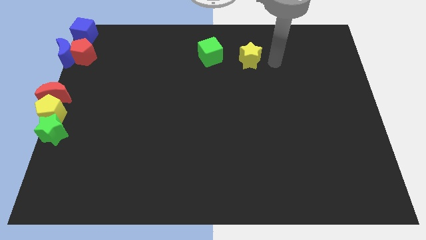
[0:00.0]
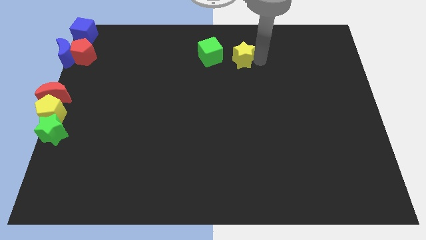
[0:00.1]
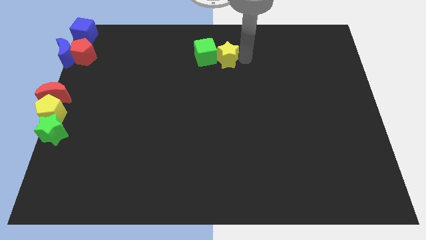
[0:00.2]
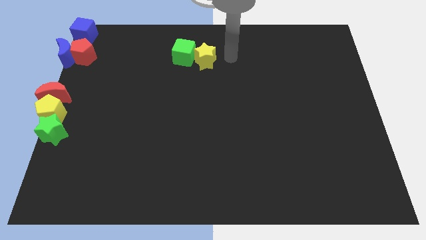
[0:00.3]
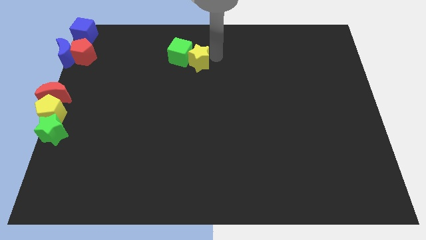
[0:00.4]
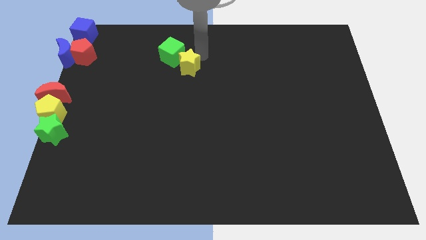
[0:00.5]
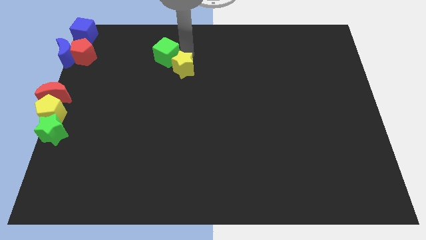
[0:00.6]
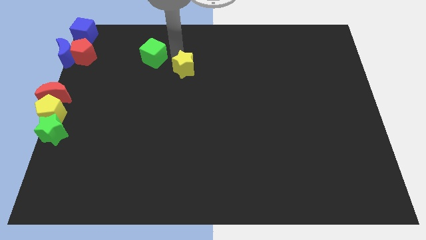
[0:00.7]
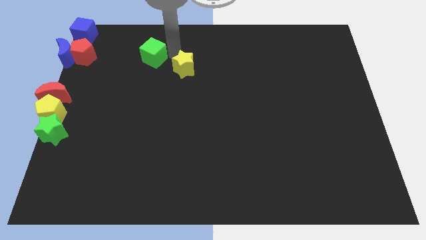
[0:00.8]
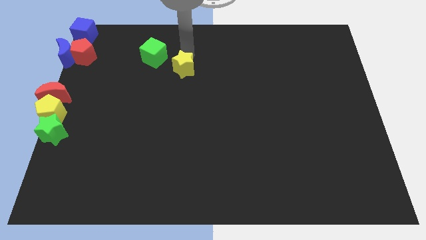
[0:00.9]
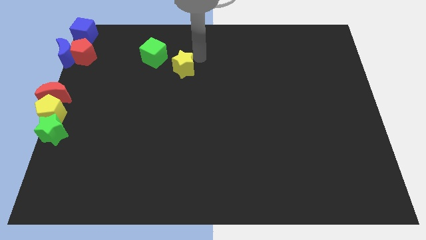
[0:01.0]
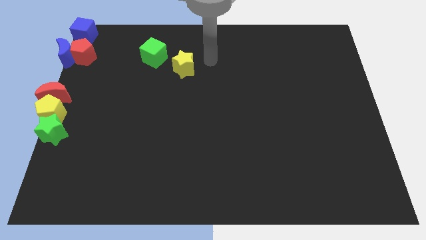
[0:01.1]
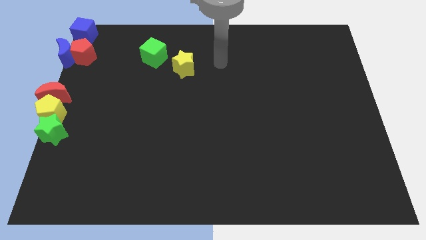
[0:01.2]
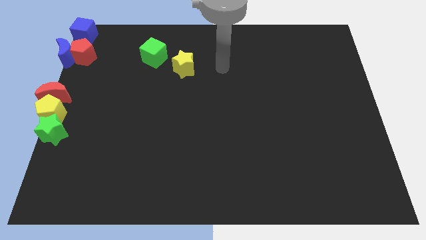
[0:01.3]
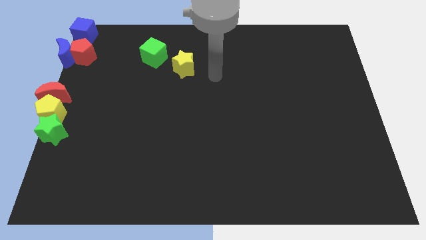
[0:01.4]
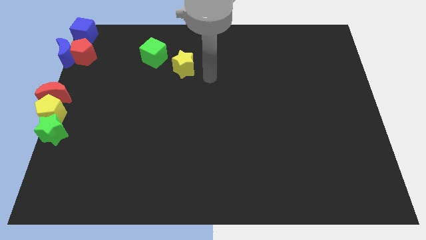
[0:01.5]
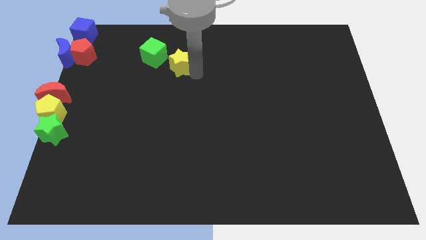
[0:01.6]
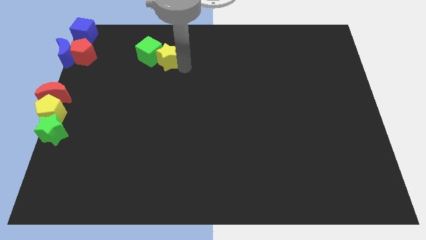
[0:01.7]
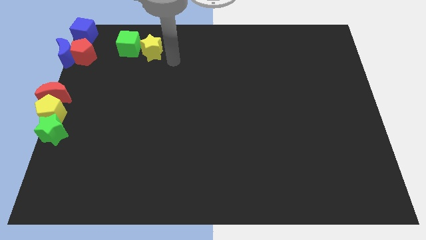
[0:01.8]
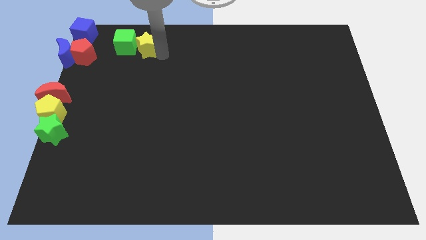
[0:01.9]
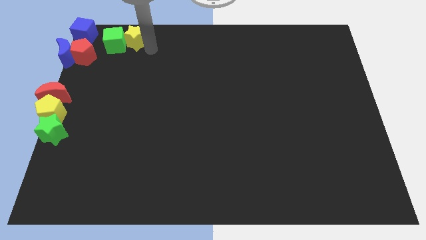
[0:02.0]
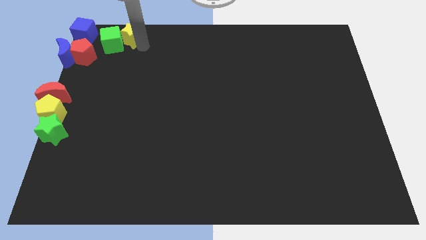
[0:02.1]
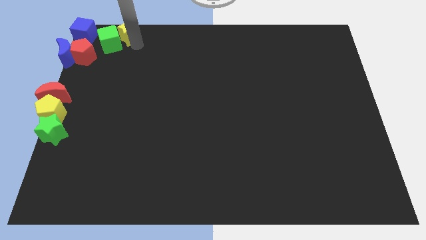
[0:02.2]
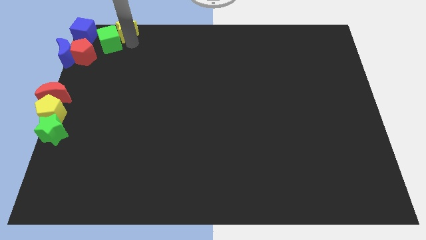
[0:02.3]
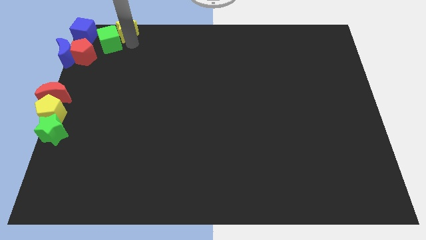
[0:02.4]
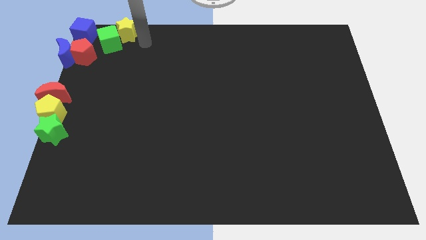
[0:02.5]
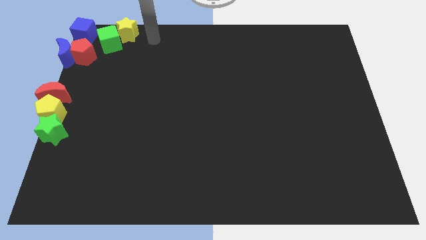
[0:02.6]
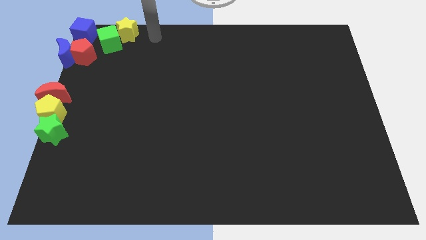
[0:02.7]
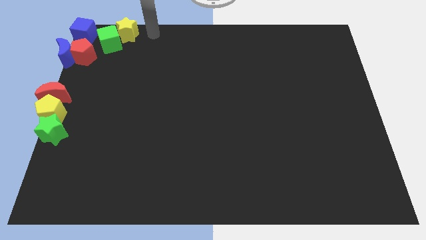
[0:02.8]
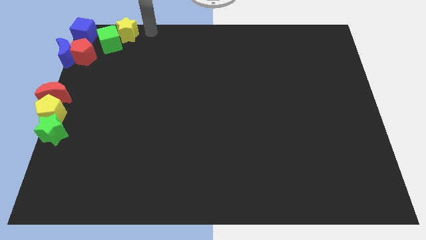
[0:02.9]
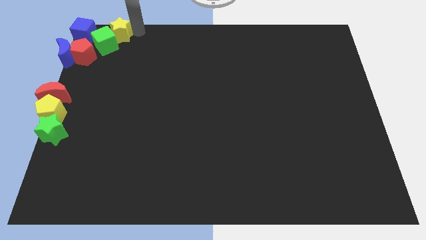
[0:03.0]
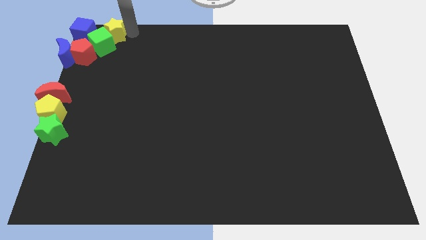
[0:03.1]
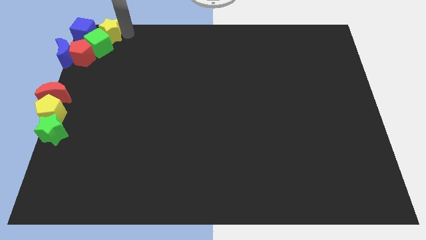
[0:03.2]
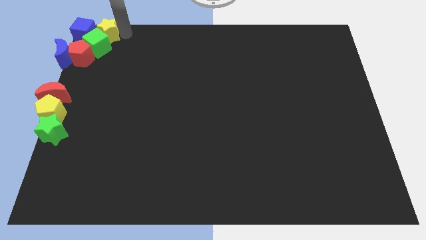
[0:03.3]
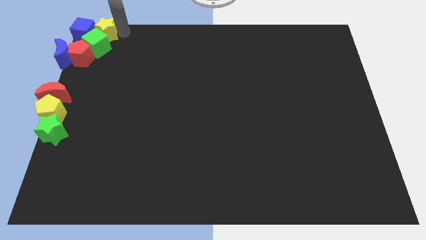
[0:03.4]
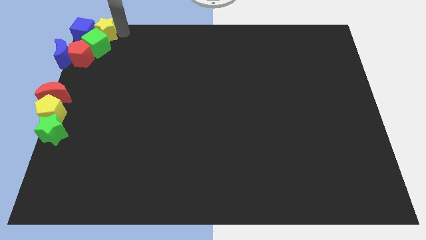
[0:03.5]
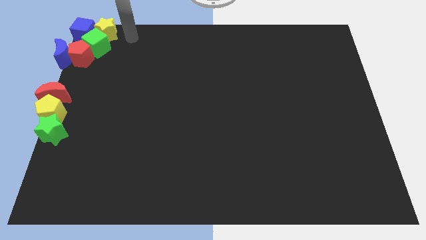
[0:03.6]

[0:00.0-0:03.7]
push the yellow star and green cube into the blue cube

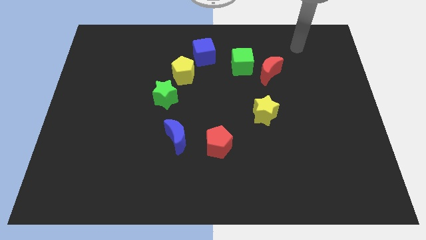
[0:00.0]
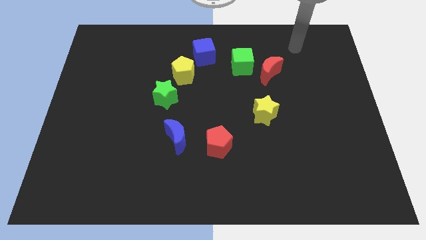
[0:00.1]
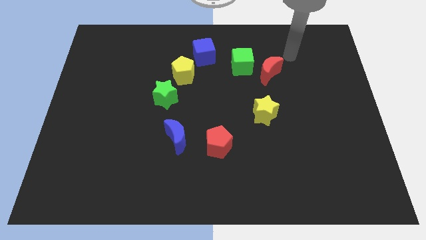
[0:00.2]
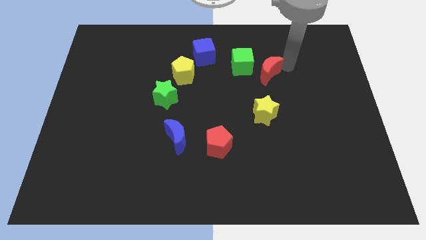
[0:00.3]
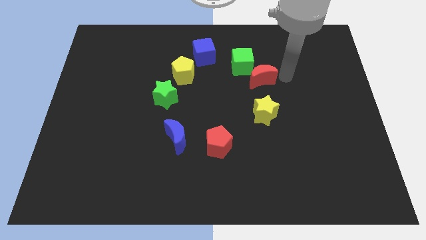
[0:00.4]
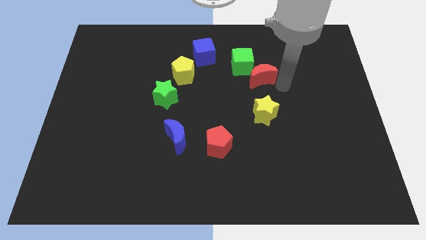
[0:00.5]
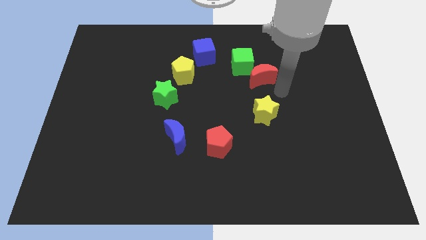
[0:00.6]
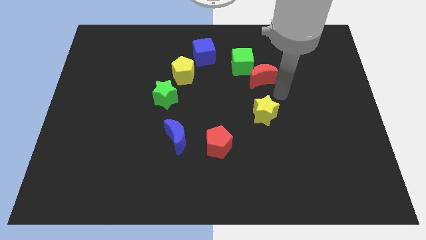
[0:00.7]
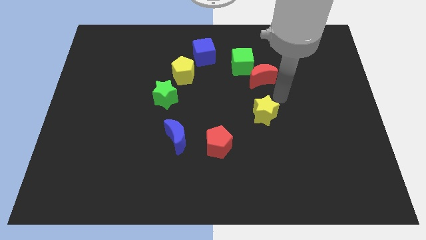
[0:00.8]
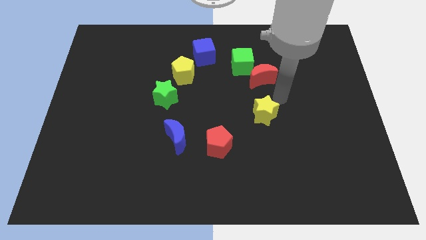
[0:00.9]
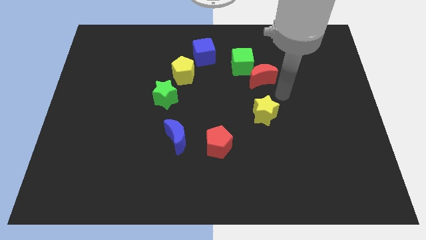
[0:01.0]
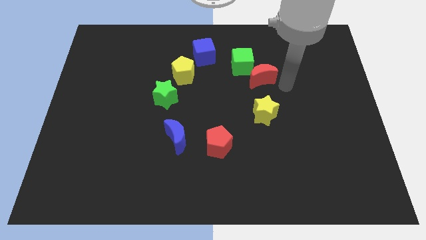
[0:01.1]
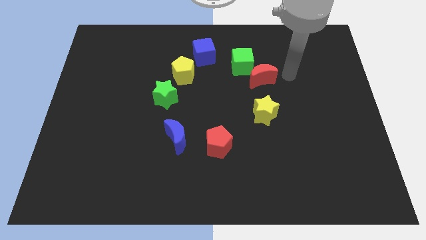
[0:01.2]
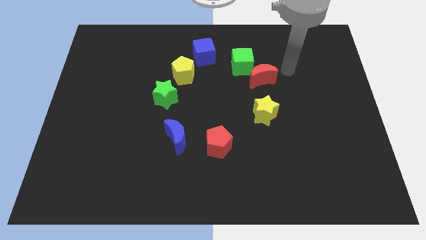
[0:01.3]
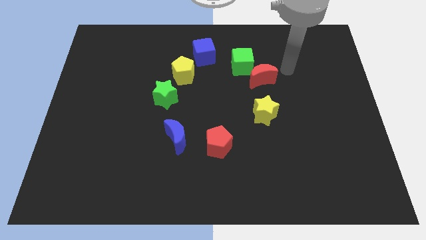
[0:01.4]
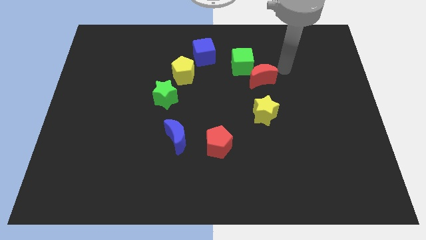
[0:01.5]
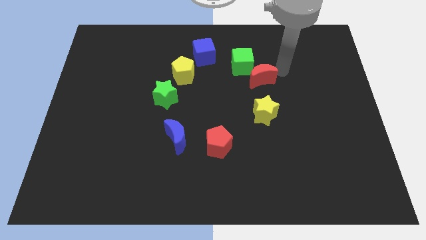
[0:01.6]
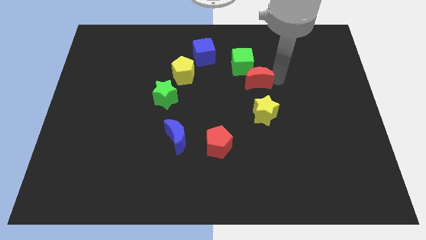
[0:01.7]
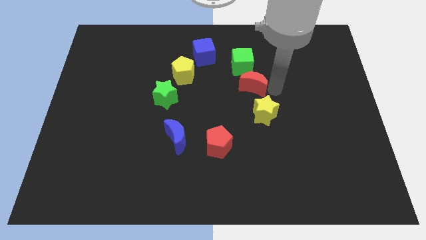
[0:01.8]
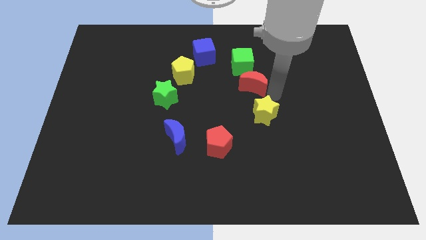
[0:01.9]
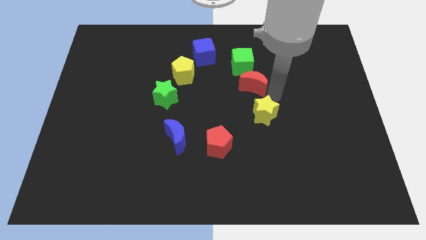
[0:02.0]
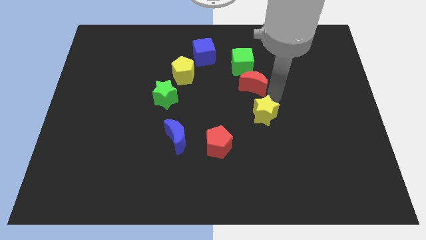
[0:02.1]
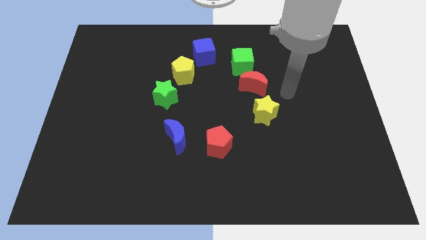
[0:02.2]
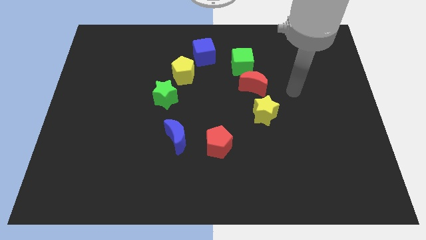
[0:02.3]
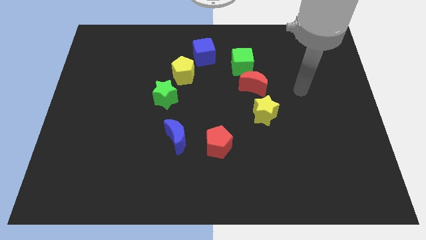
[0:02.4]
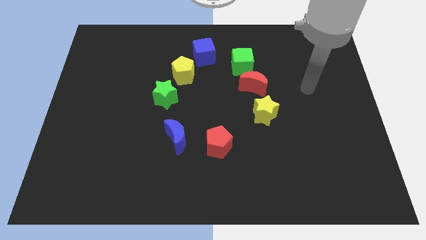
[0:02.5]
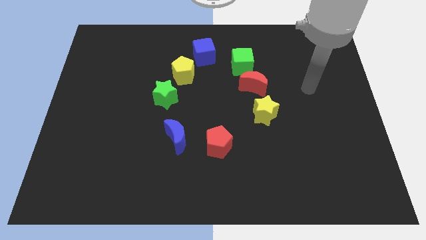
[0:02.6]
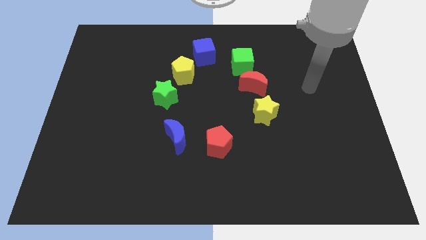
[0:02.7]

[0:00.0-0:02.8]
move the red moon down to the green cube

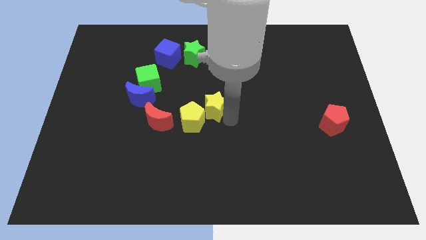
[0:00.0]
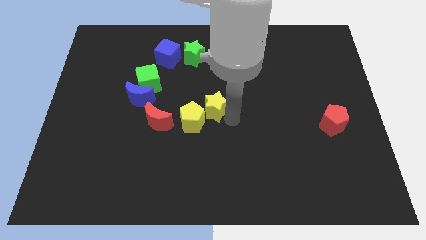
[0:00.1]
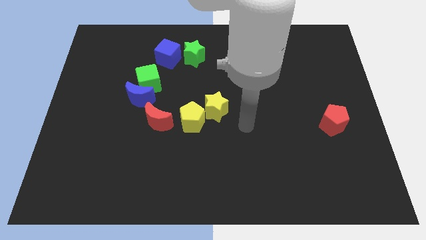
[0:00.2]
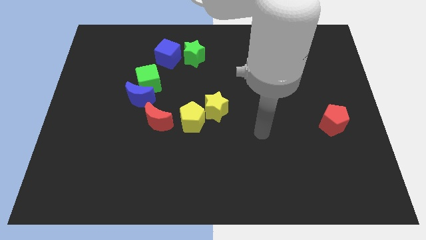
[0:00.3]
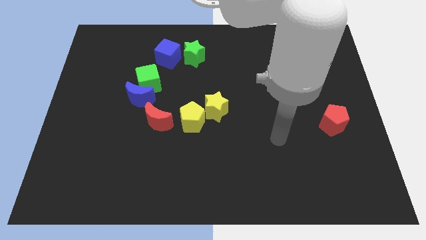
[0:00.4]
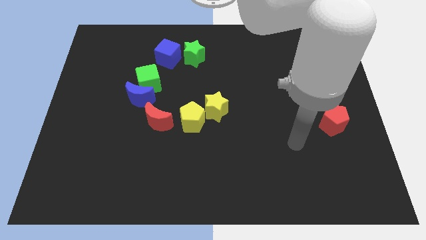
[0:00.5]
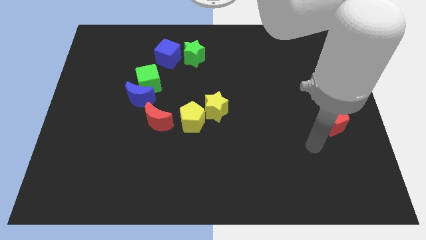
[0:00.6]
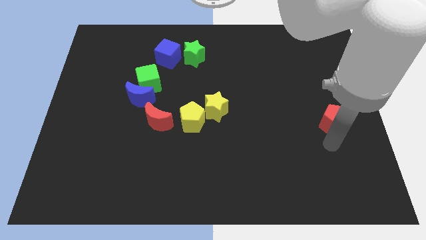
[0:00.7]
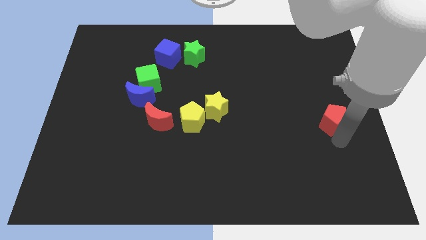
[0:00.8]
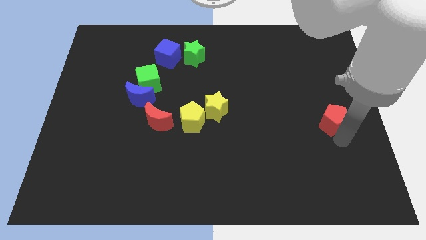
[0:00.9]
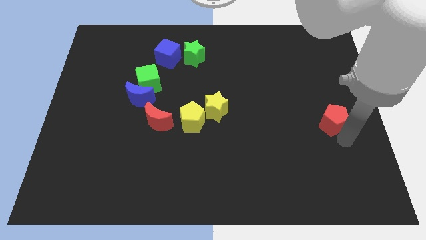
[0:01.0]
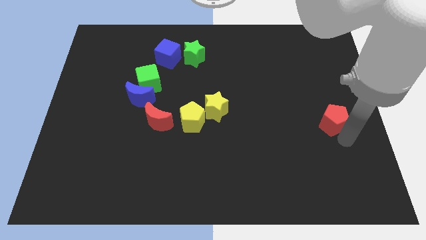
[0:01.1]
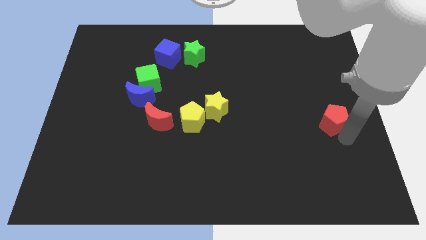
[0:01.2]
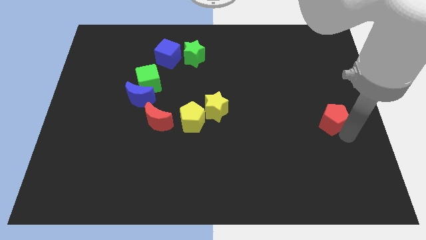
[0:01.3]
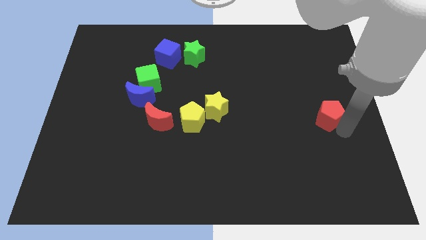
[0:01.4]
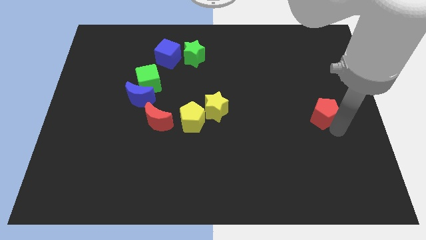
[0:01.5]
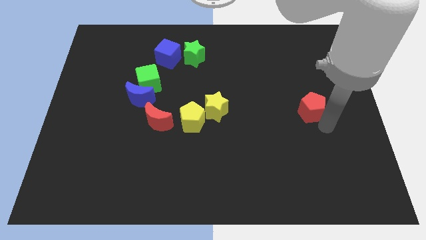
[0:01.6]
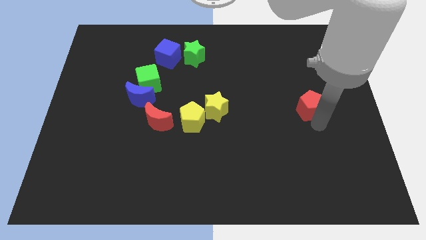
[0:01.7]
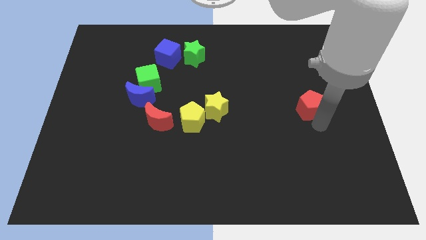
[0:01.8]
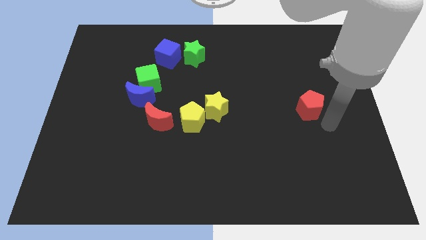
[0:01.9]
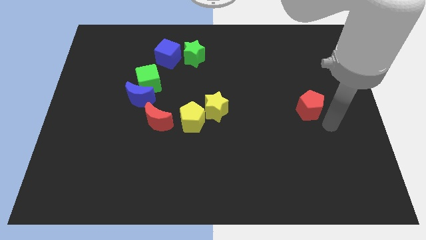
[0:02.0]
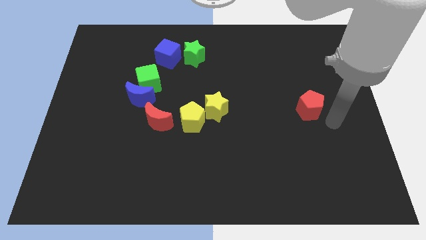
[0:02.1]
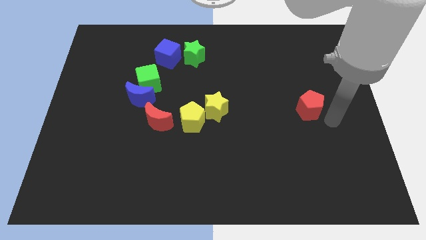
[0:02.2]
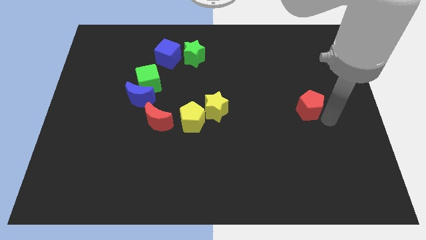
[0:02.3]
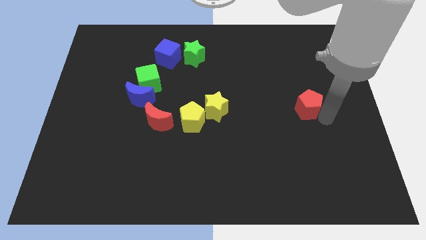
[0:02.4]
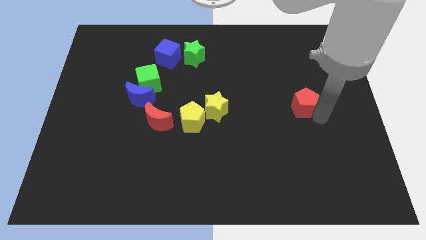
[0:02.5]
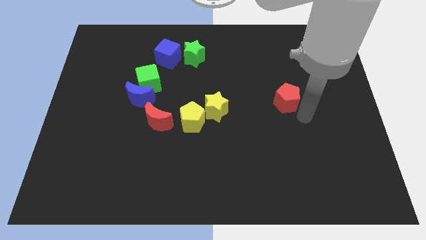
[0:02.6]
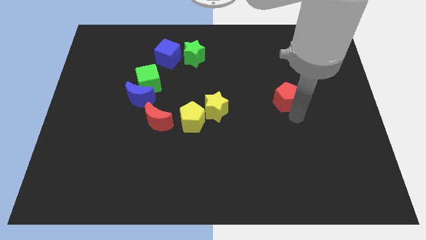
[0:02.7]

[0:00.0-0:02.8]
move the red pentagon to the right of the yellow star
